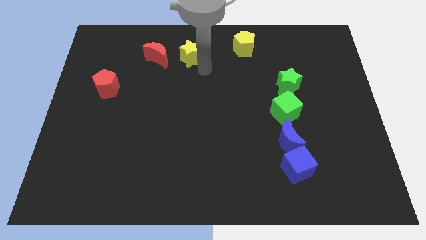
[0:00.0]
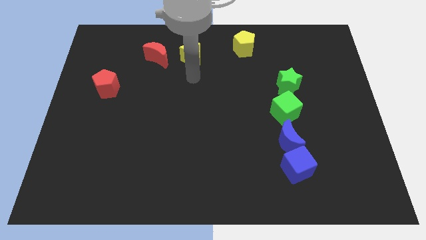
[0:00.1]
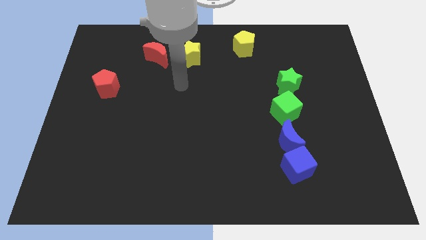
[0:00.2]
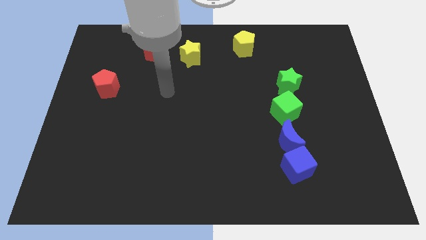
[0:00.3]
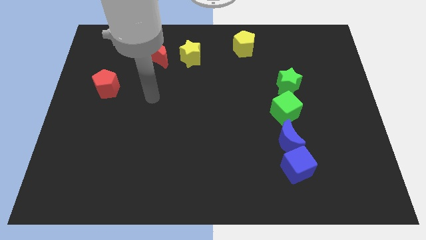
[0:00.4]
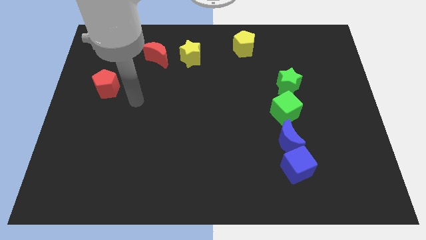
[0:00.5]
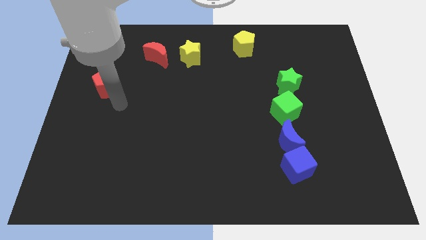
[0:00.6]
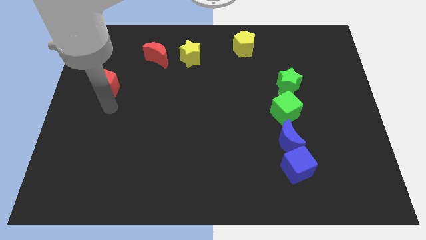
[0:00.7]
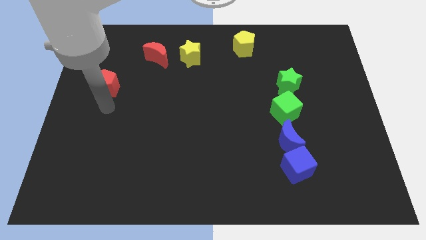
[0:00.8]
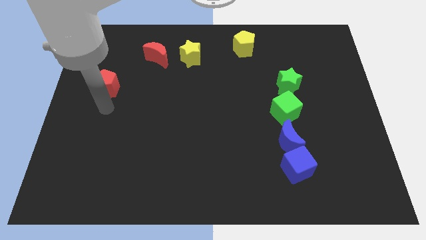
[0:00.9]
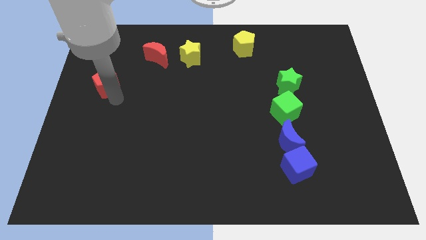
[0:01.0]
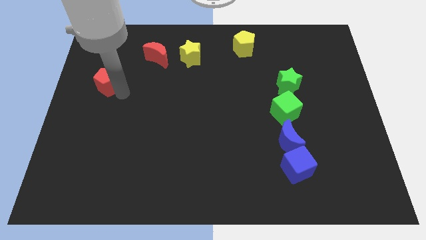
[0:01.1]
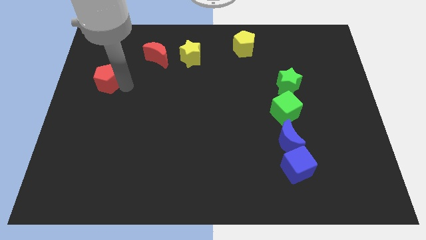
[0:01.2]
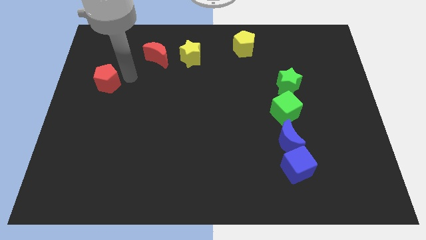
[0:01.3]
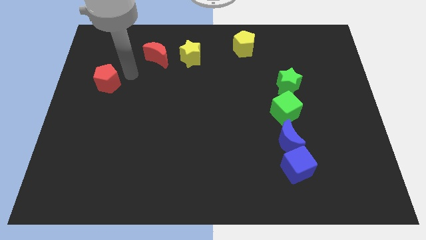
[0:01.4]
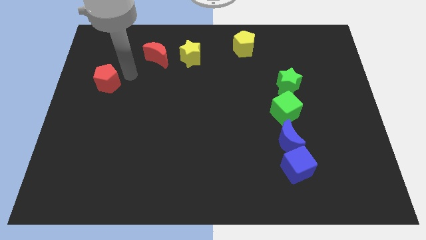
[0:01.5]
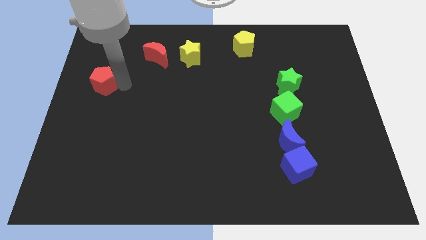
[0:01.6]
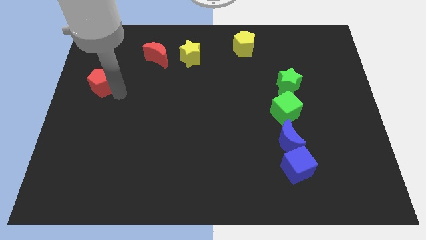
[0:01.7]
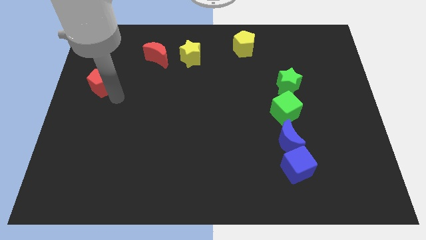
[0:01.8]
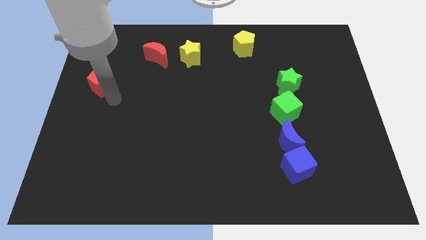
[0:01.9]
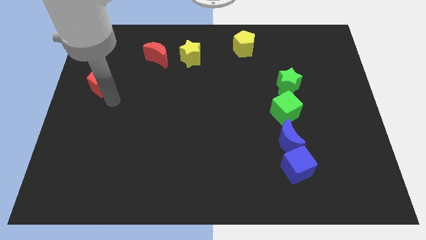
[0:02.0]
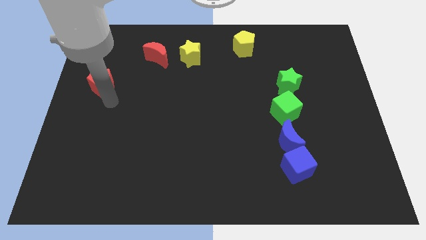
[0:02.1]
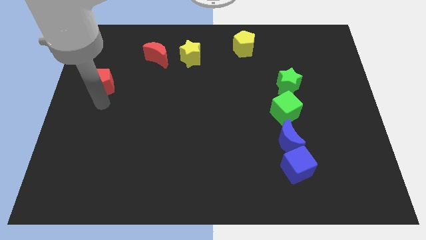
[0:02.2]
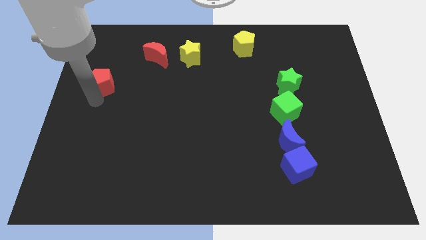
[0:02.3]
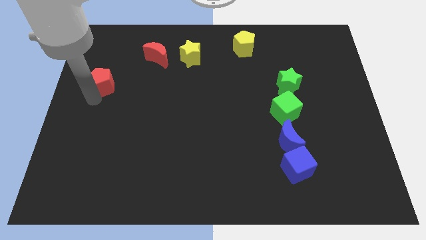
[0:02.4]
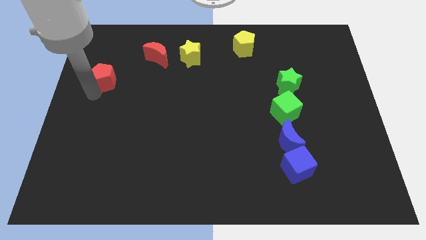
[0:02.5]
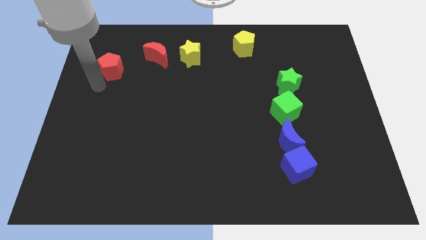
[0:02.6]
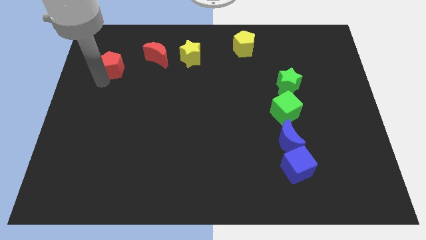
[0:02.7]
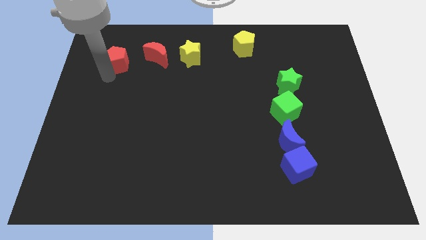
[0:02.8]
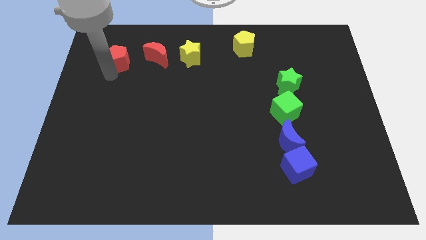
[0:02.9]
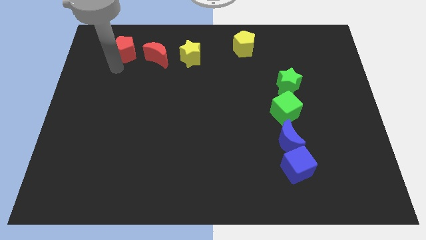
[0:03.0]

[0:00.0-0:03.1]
move the red pentagon to the right side of the red crescent

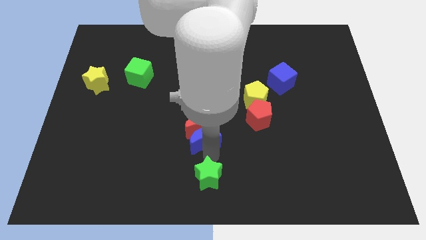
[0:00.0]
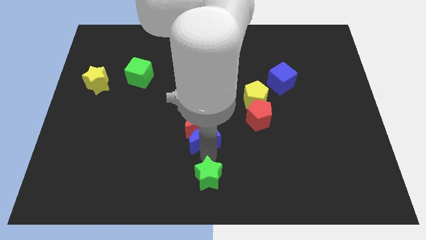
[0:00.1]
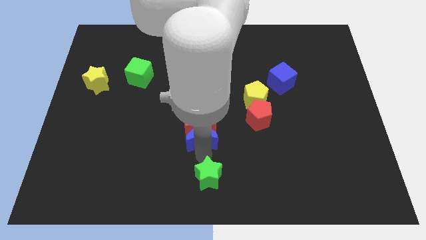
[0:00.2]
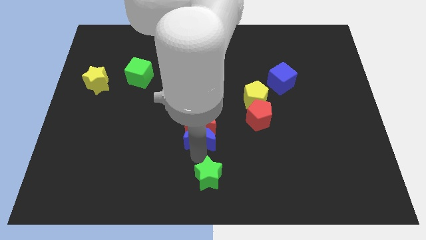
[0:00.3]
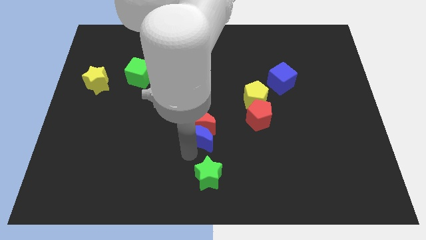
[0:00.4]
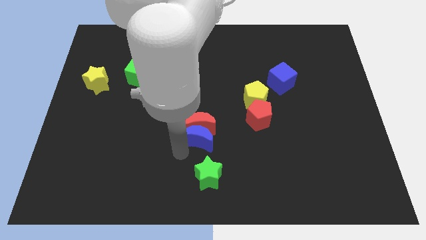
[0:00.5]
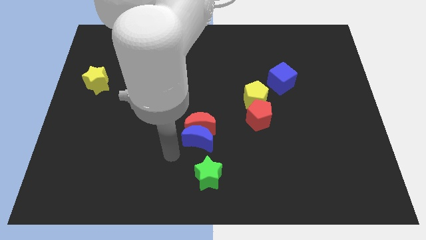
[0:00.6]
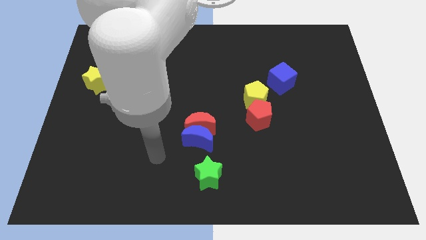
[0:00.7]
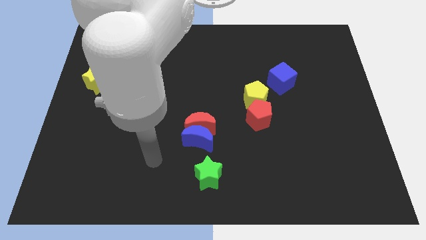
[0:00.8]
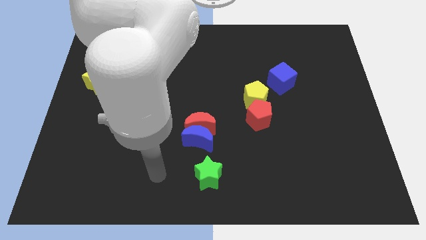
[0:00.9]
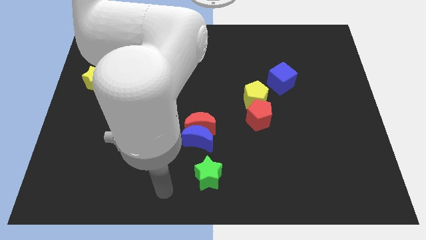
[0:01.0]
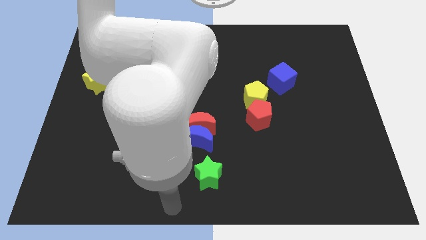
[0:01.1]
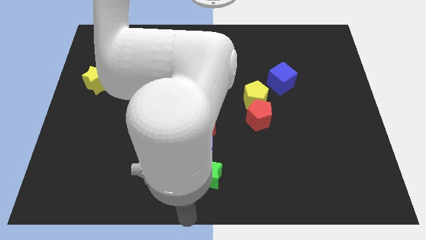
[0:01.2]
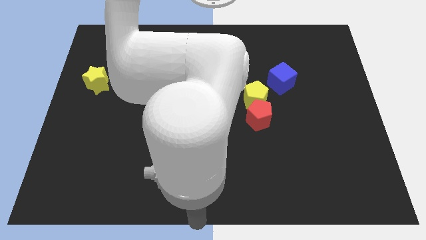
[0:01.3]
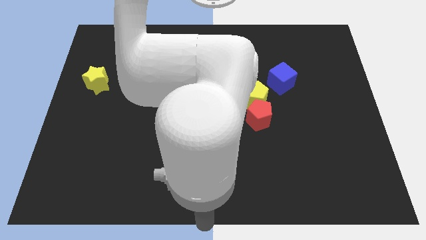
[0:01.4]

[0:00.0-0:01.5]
place the blue moon vertically below the red moon

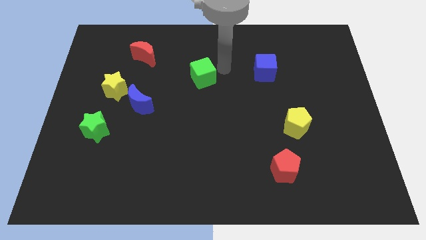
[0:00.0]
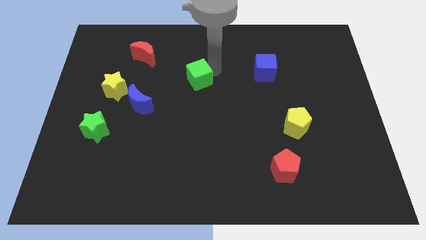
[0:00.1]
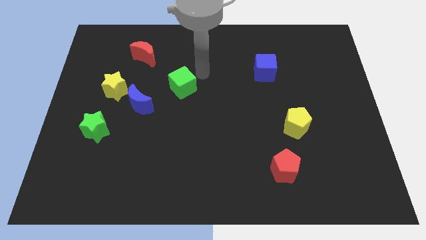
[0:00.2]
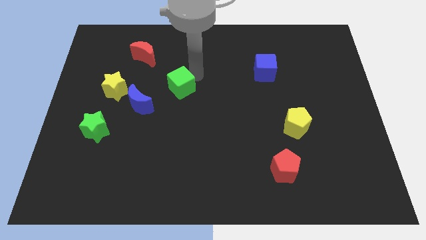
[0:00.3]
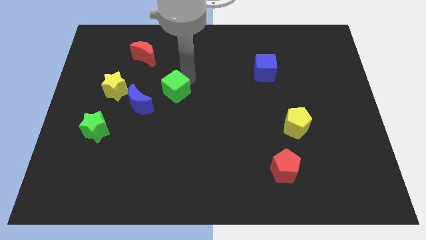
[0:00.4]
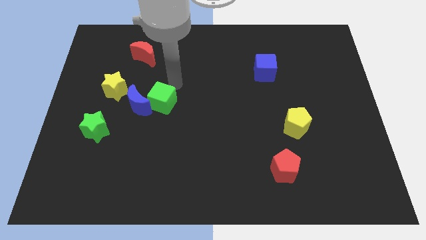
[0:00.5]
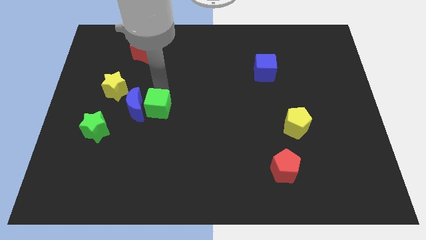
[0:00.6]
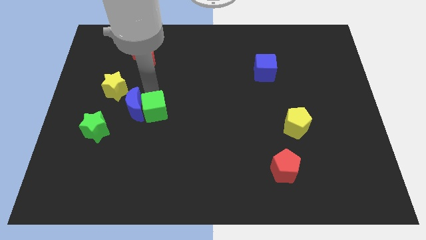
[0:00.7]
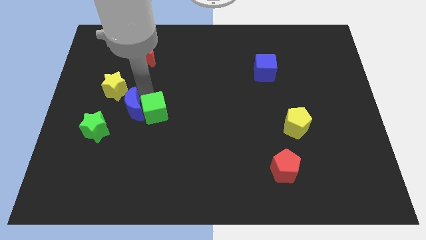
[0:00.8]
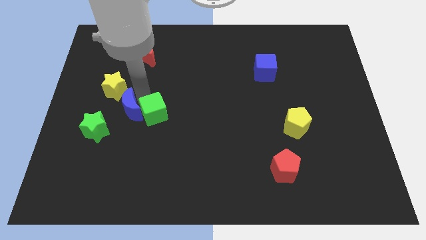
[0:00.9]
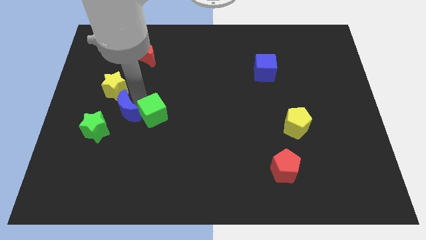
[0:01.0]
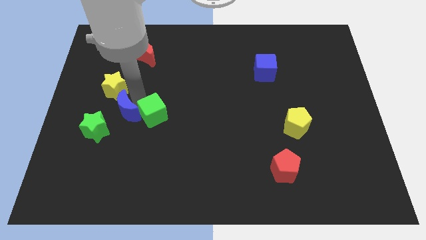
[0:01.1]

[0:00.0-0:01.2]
push the green cube into the blue moon

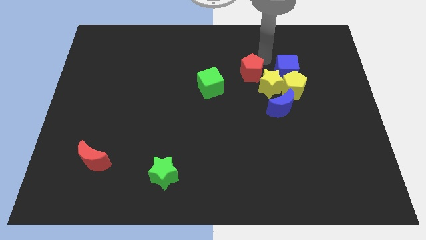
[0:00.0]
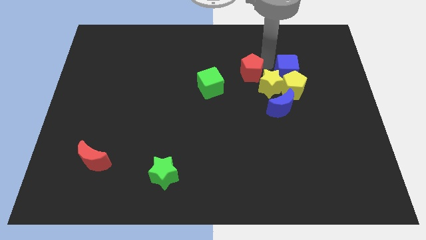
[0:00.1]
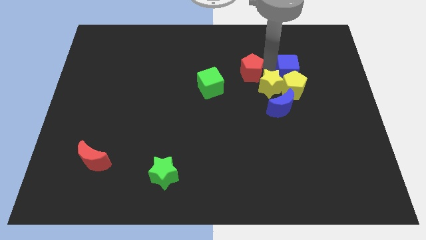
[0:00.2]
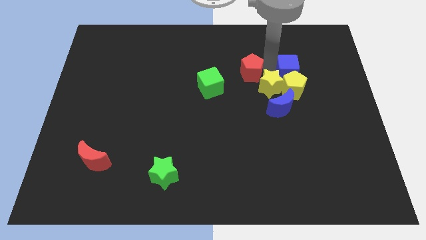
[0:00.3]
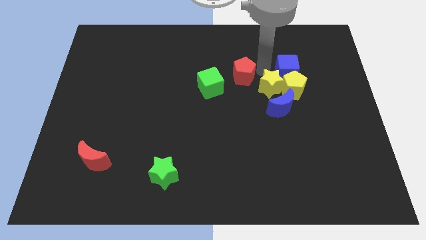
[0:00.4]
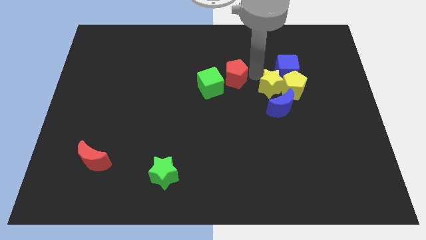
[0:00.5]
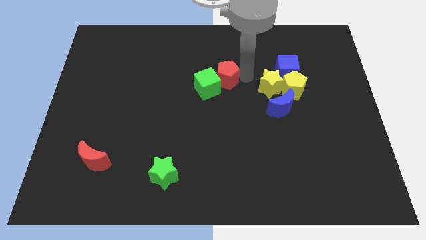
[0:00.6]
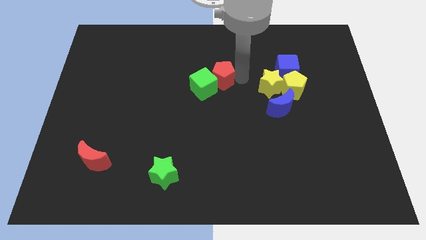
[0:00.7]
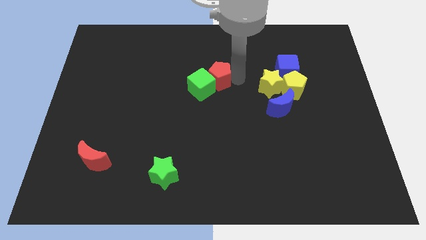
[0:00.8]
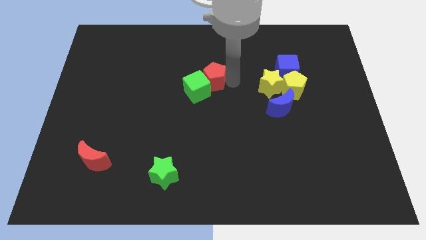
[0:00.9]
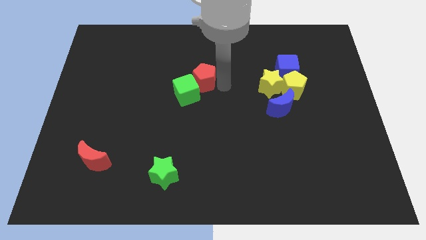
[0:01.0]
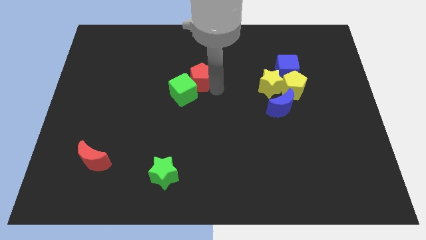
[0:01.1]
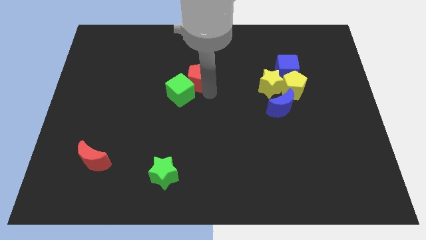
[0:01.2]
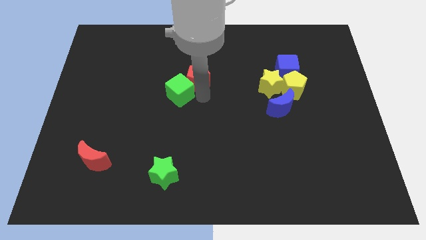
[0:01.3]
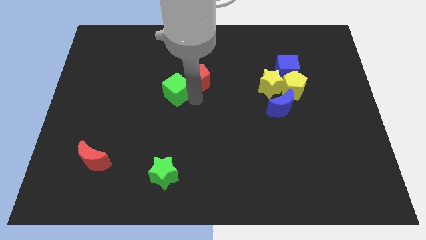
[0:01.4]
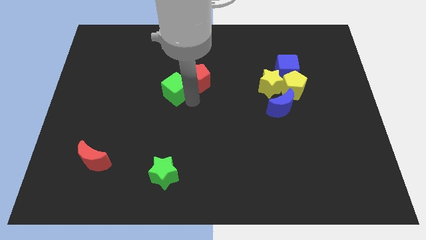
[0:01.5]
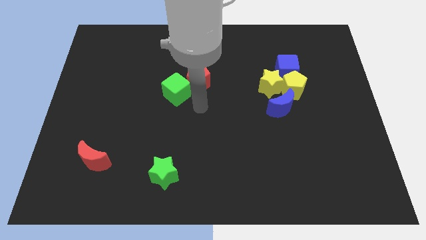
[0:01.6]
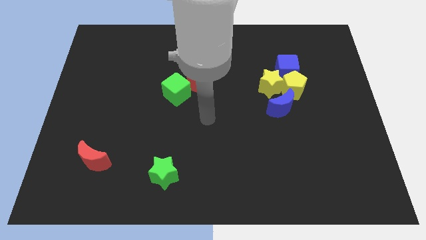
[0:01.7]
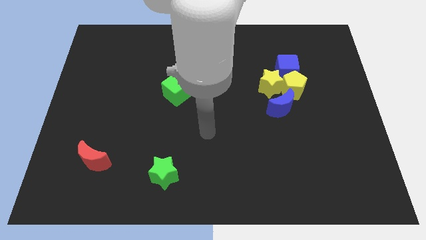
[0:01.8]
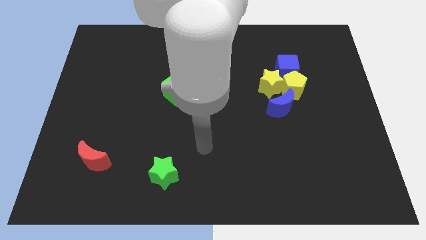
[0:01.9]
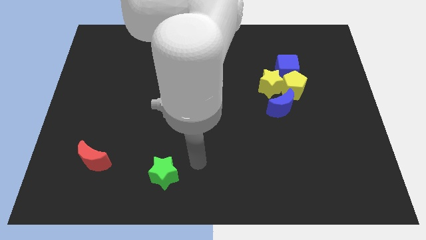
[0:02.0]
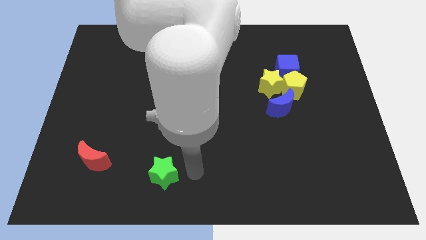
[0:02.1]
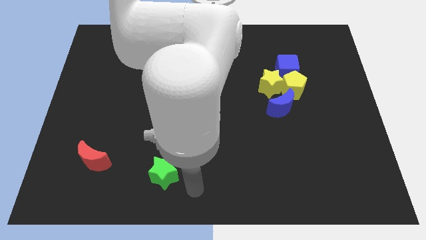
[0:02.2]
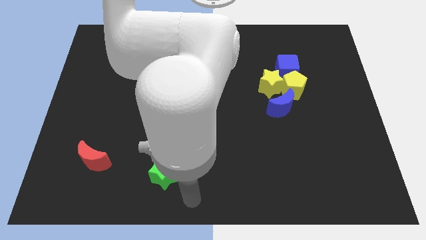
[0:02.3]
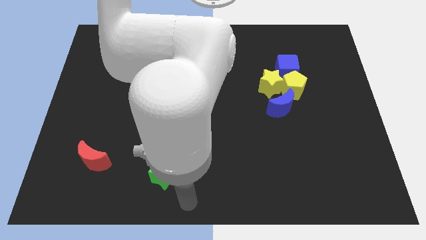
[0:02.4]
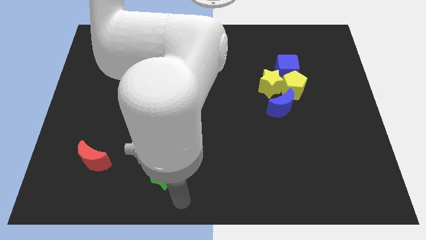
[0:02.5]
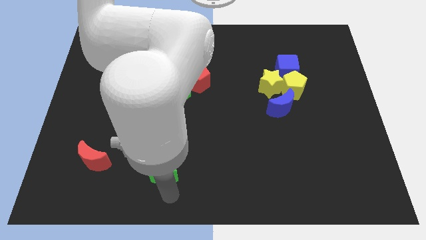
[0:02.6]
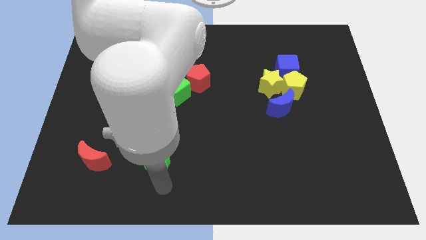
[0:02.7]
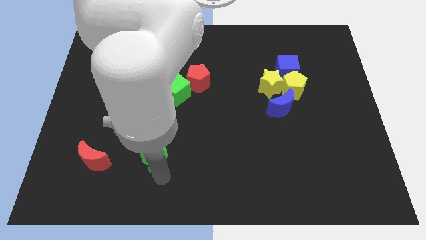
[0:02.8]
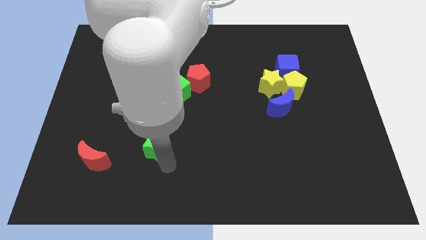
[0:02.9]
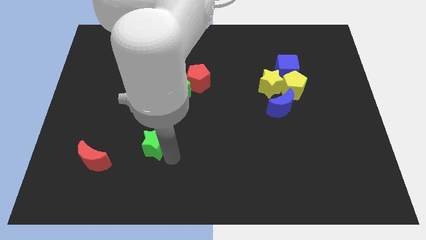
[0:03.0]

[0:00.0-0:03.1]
slightly push the red pentagon towards the green cube
